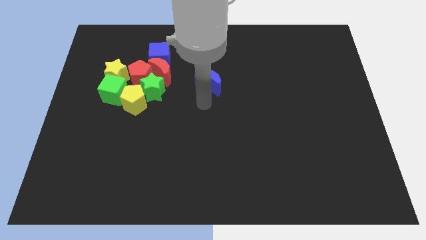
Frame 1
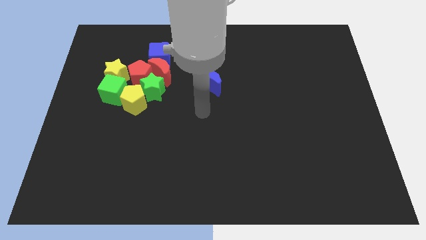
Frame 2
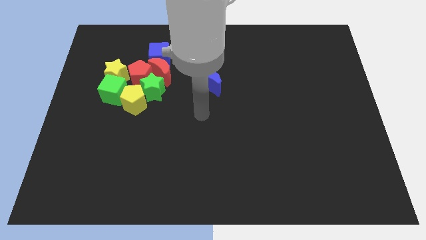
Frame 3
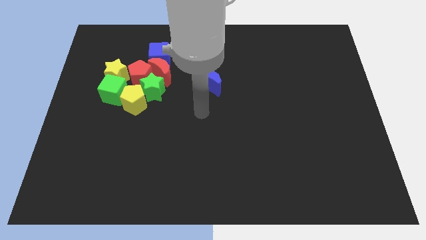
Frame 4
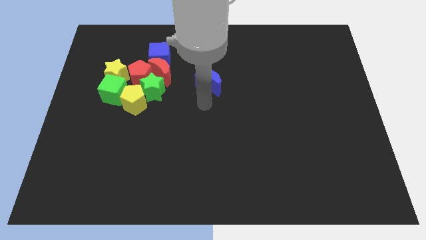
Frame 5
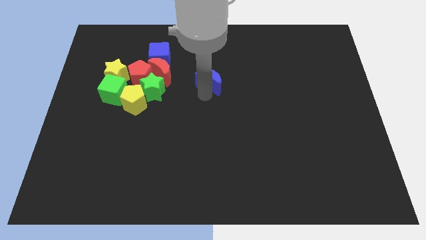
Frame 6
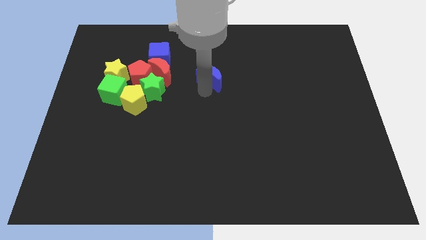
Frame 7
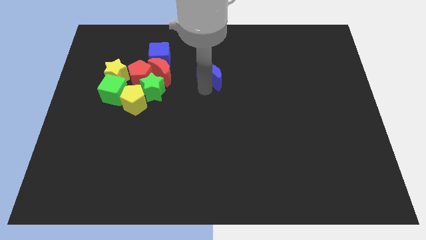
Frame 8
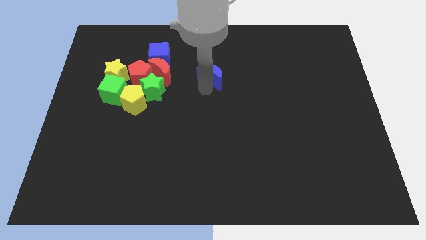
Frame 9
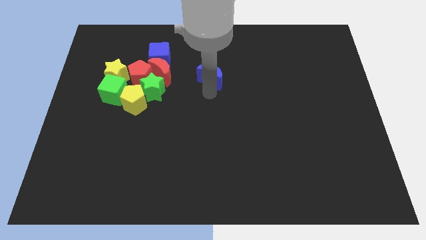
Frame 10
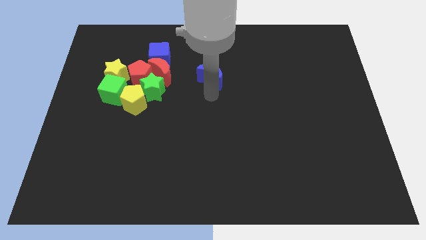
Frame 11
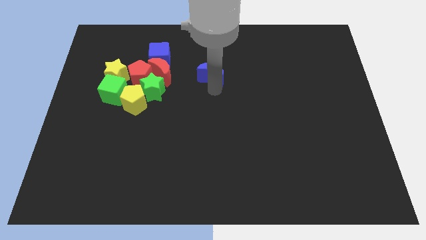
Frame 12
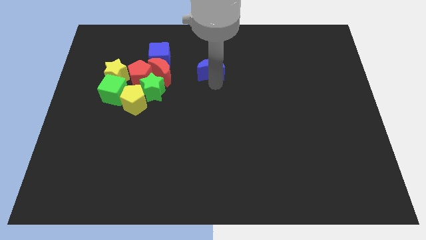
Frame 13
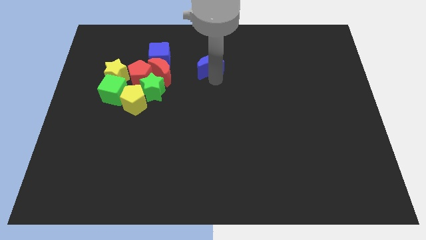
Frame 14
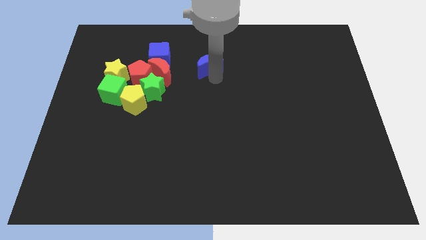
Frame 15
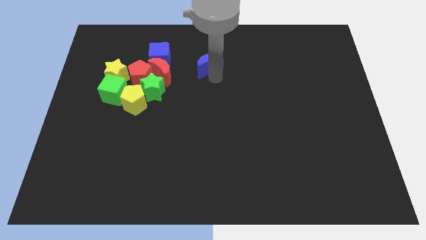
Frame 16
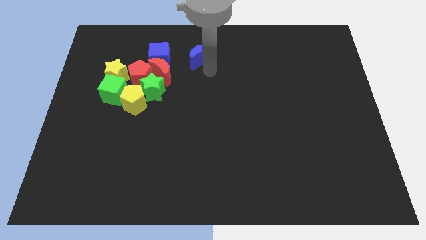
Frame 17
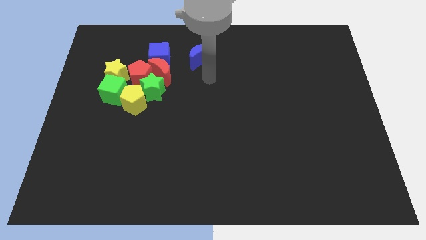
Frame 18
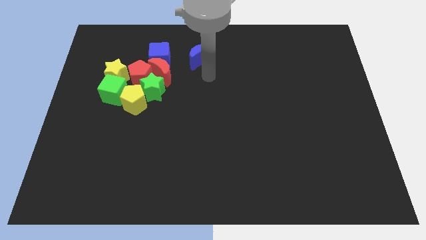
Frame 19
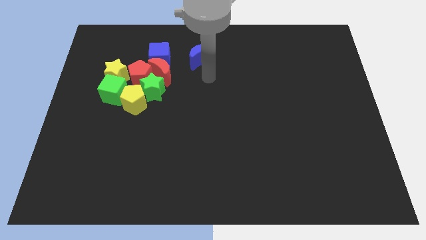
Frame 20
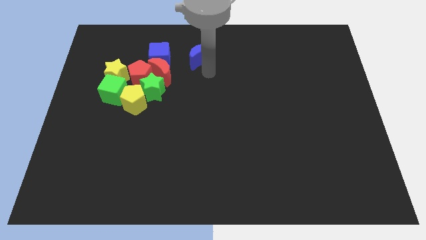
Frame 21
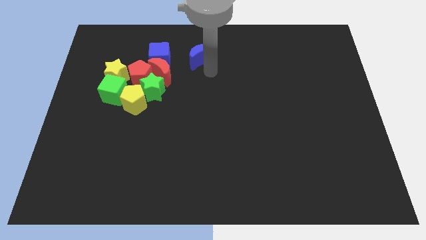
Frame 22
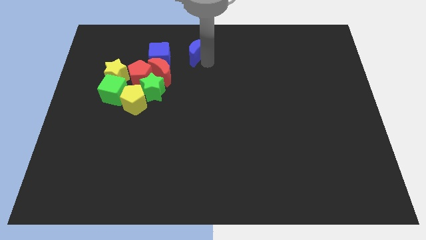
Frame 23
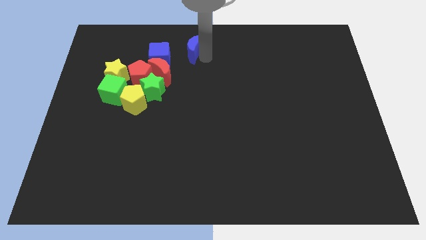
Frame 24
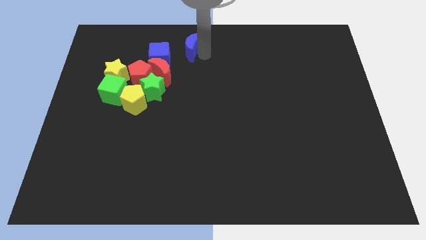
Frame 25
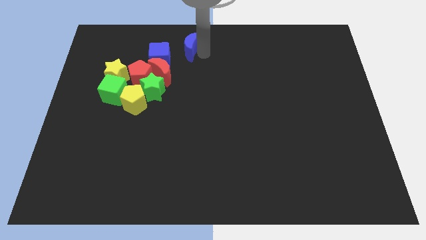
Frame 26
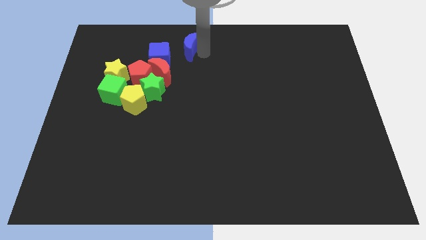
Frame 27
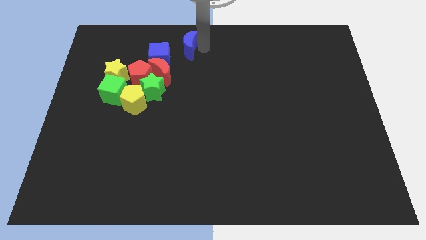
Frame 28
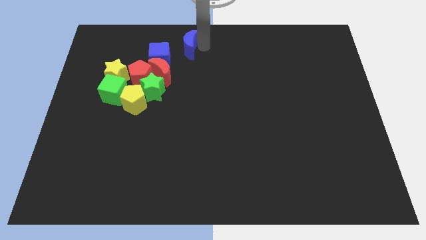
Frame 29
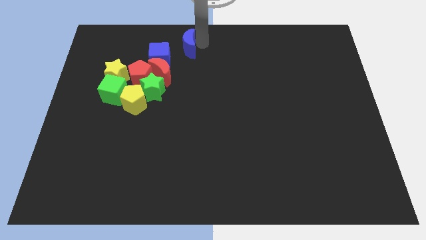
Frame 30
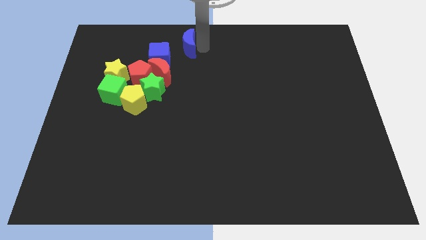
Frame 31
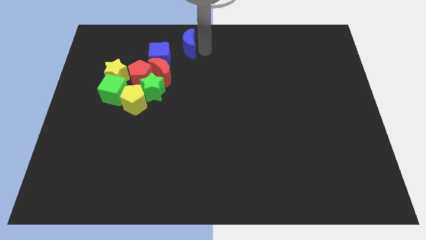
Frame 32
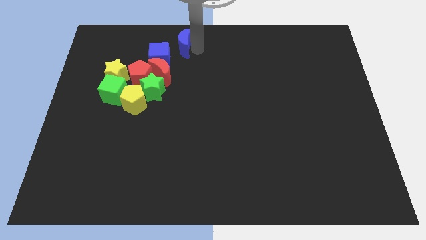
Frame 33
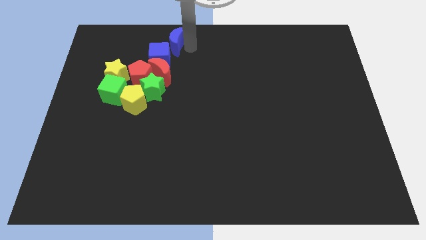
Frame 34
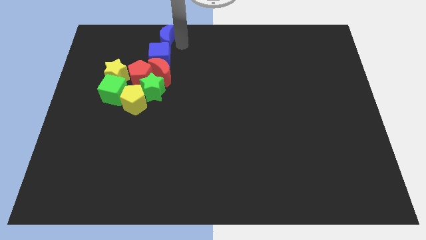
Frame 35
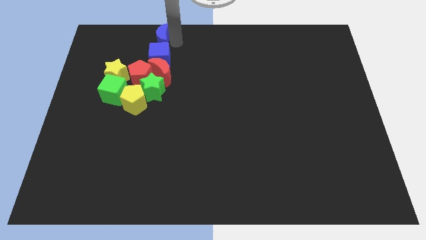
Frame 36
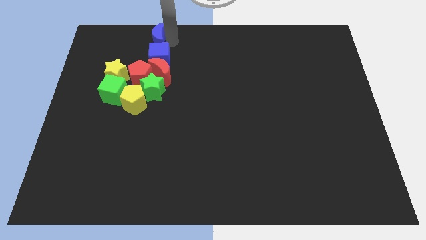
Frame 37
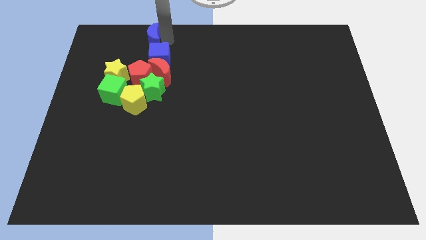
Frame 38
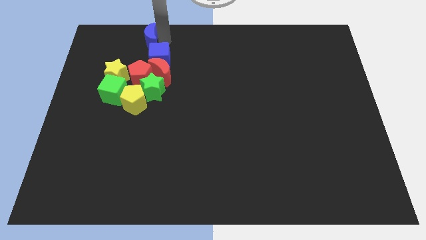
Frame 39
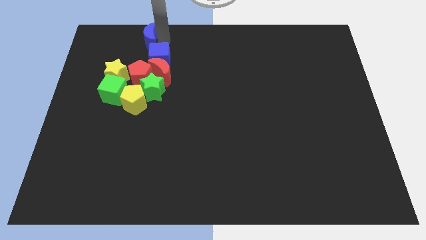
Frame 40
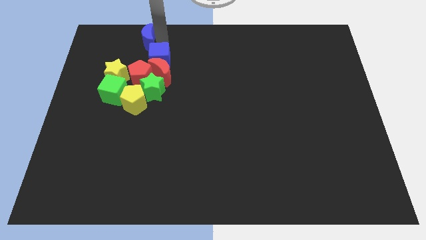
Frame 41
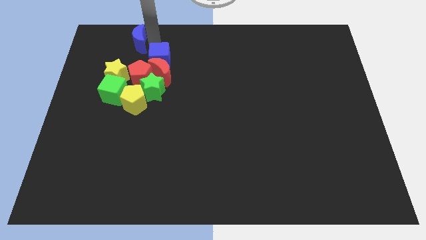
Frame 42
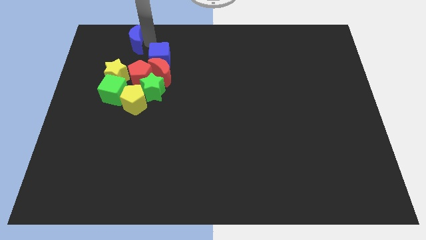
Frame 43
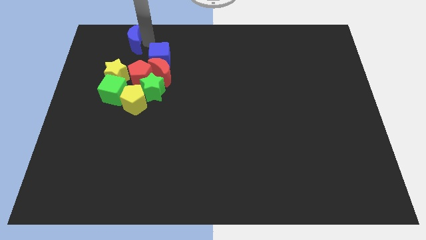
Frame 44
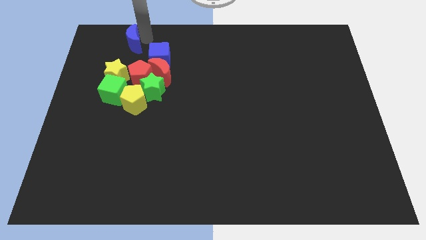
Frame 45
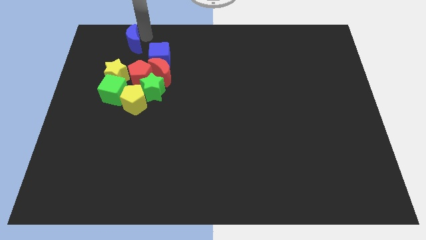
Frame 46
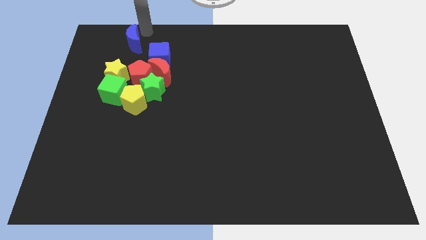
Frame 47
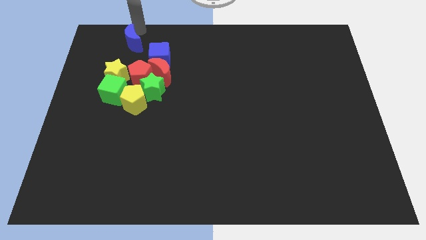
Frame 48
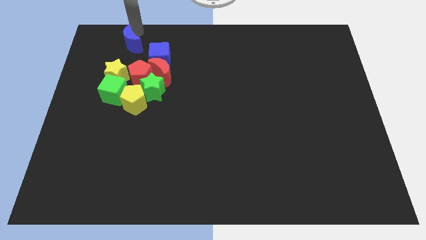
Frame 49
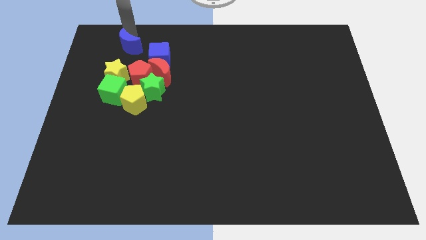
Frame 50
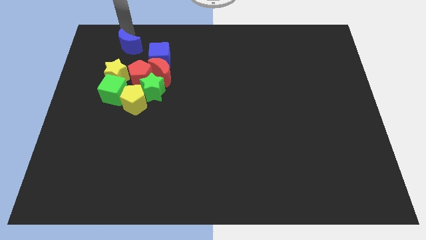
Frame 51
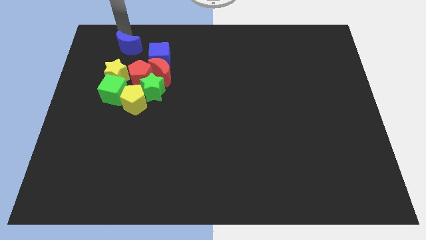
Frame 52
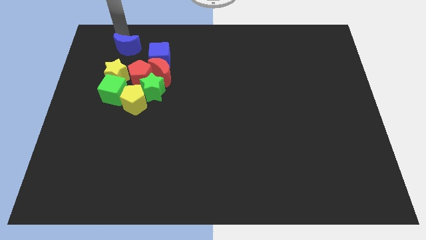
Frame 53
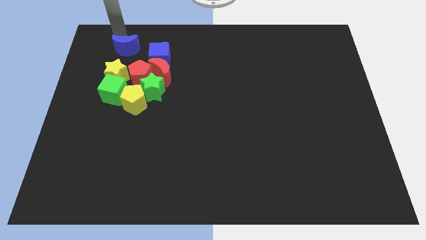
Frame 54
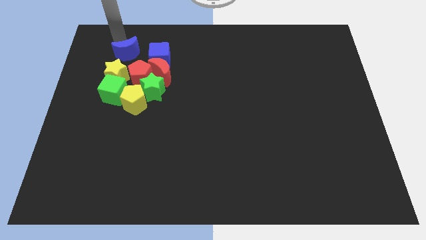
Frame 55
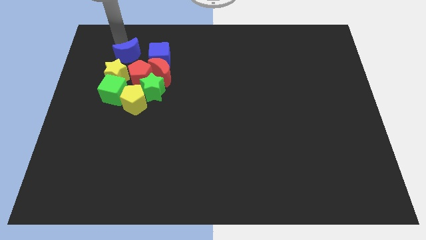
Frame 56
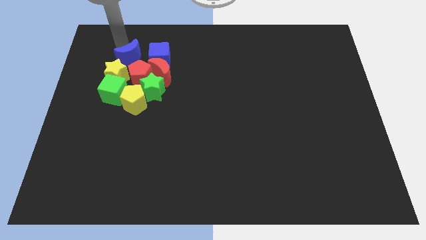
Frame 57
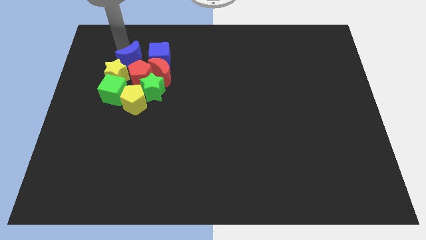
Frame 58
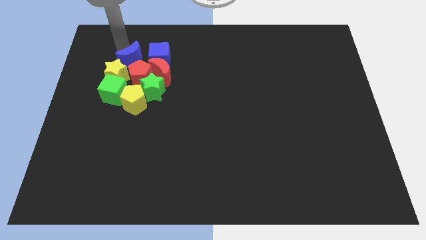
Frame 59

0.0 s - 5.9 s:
push the blue crescent towards the red pentagon

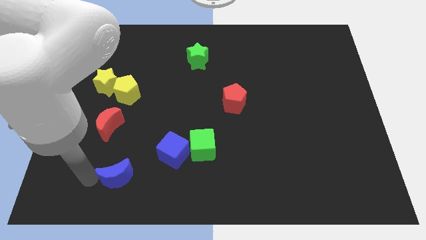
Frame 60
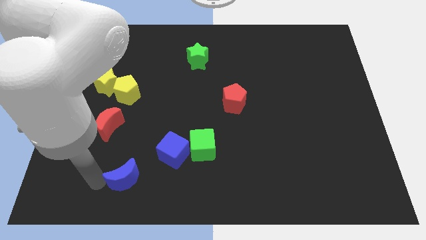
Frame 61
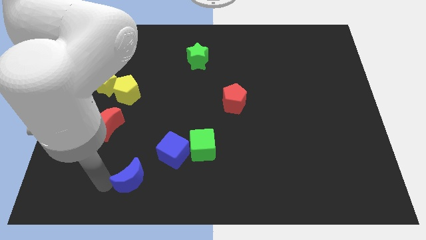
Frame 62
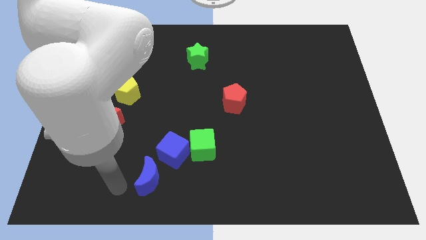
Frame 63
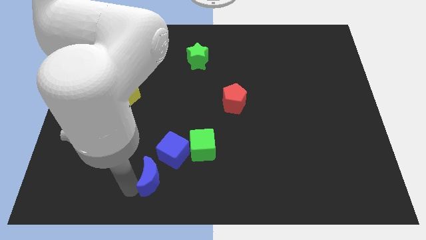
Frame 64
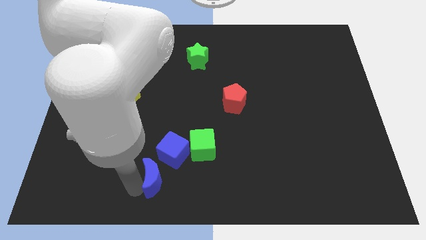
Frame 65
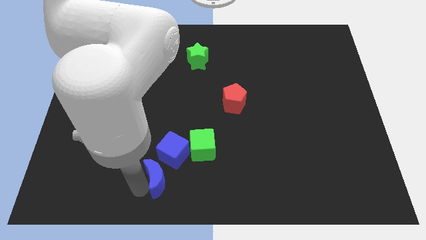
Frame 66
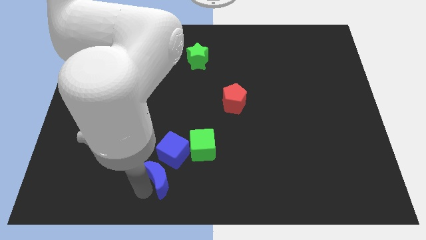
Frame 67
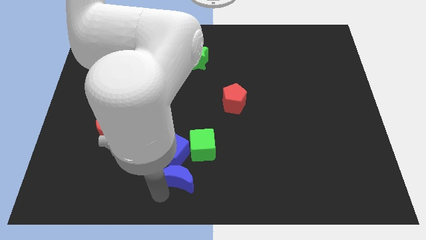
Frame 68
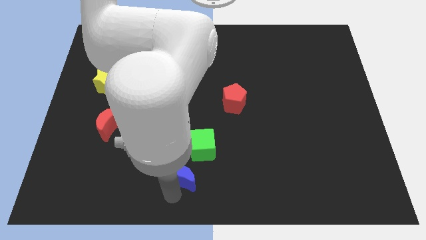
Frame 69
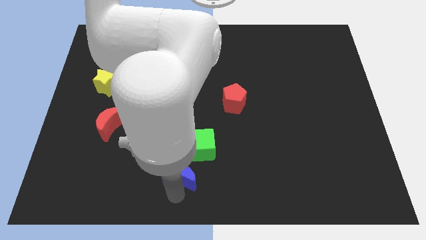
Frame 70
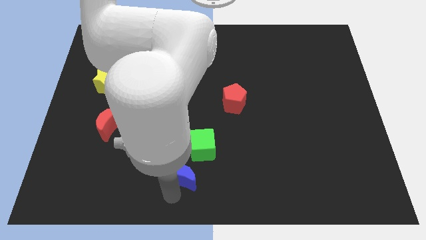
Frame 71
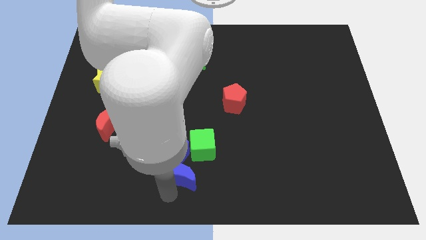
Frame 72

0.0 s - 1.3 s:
put the blue crescent below the blue cube

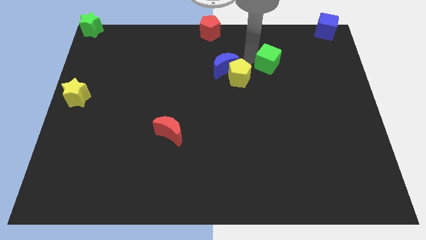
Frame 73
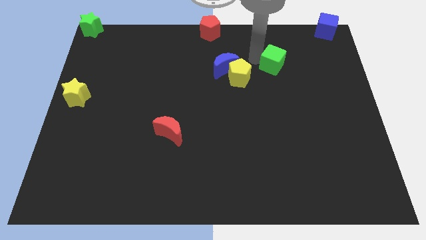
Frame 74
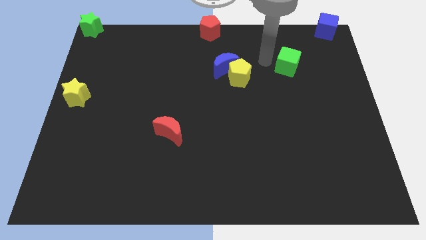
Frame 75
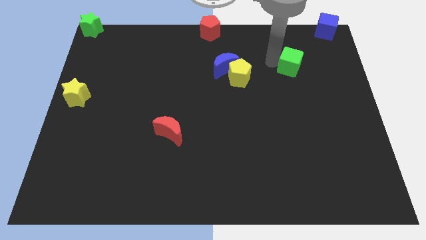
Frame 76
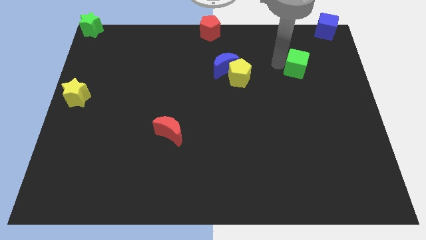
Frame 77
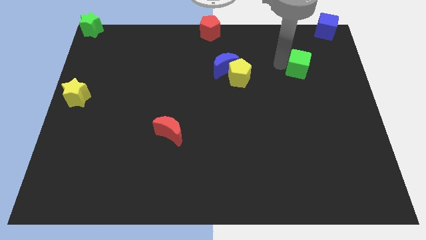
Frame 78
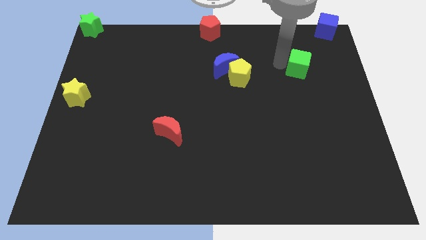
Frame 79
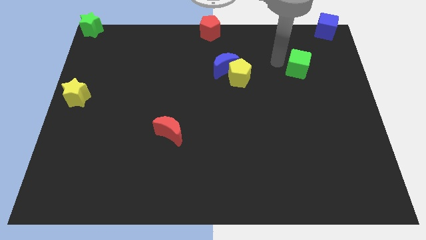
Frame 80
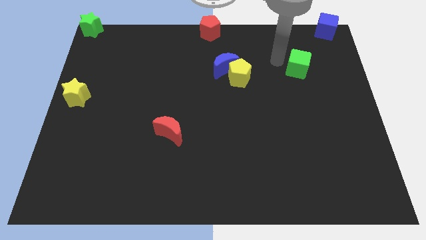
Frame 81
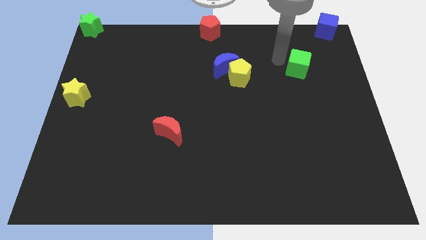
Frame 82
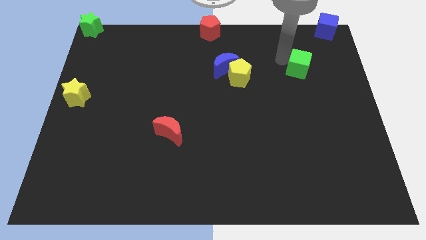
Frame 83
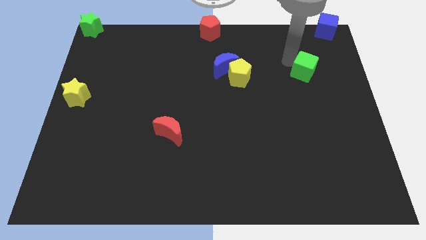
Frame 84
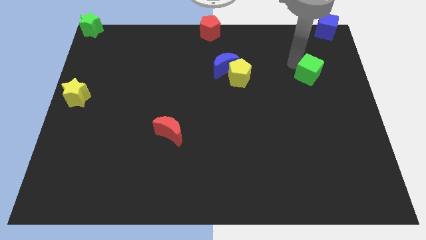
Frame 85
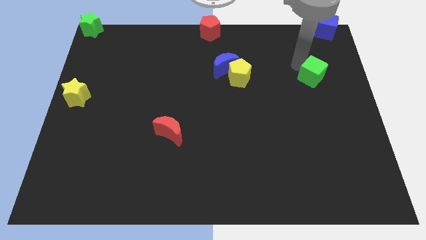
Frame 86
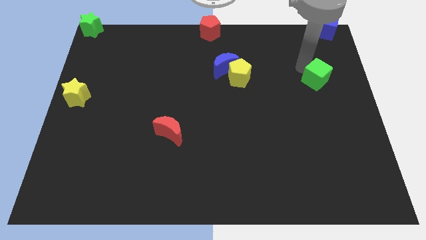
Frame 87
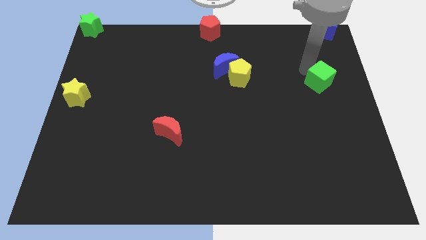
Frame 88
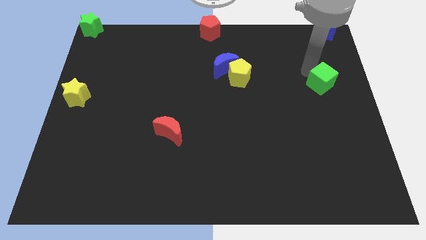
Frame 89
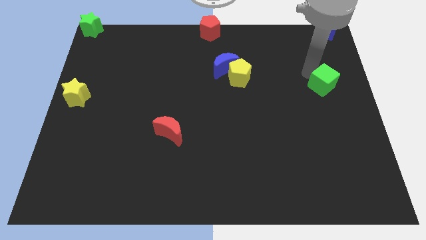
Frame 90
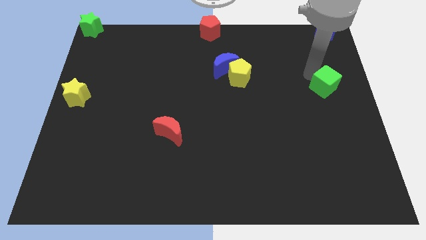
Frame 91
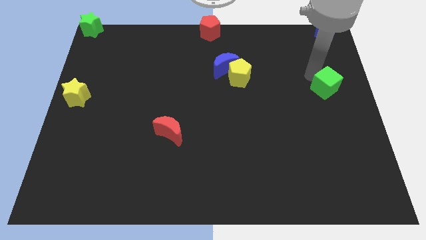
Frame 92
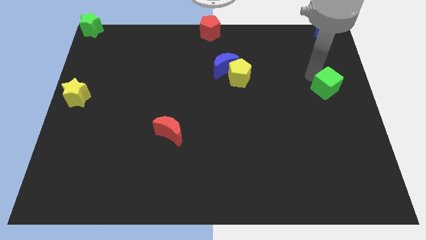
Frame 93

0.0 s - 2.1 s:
move the green cube to the bottom of the blue cube
